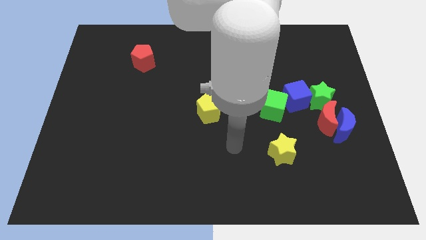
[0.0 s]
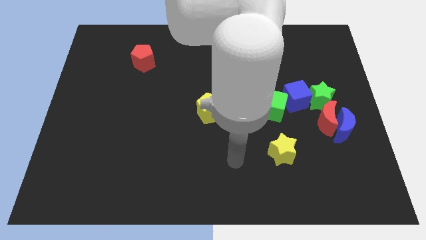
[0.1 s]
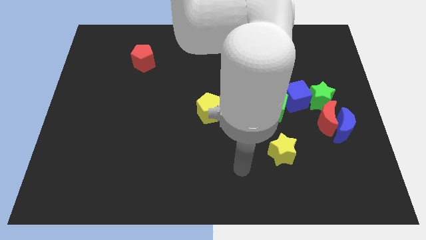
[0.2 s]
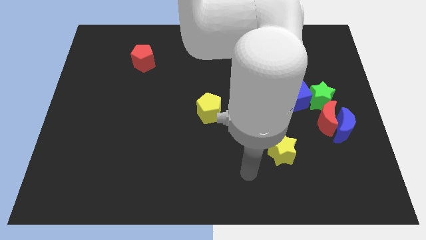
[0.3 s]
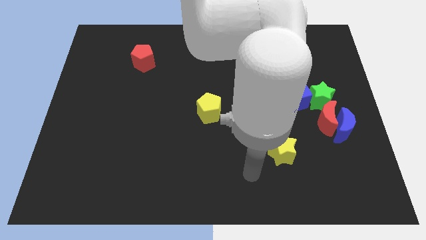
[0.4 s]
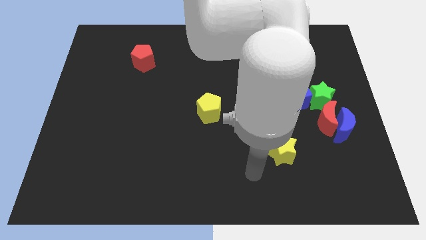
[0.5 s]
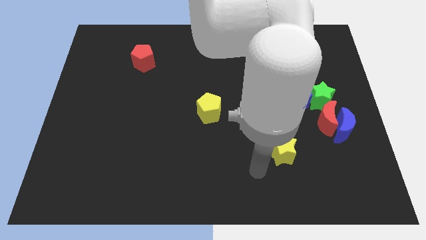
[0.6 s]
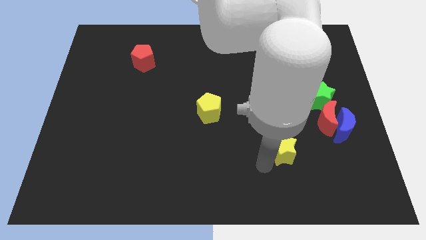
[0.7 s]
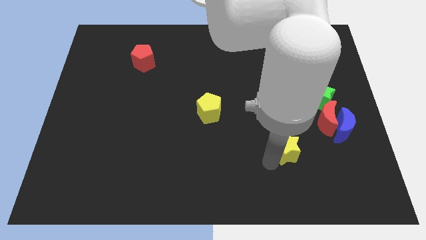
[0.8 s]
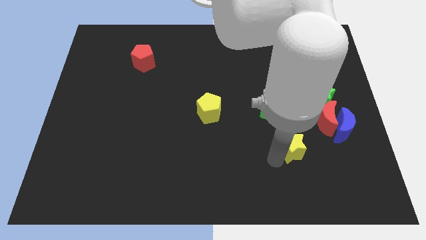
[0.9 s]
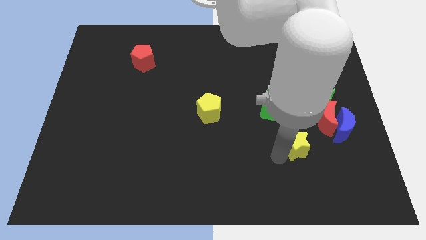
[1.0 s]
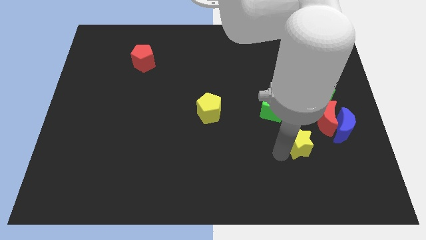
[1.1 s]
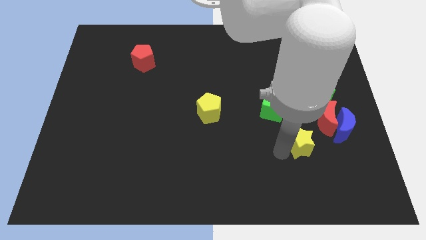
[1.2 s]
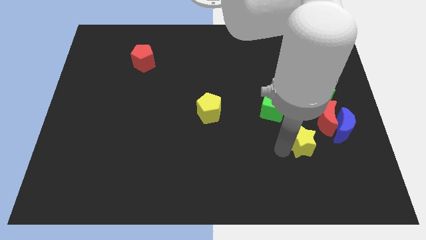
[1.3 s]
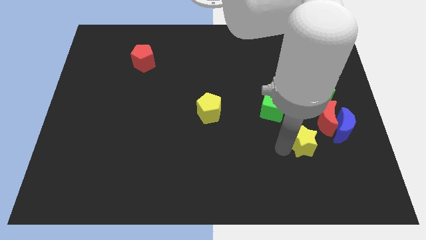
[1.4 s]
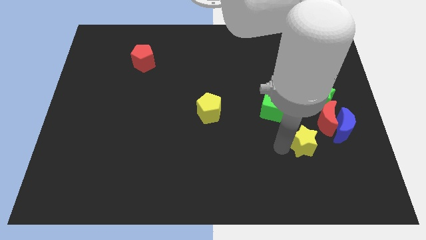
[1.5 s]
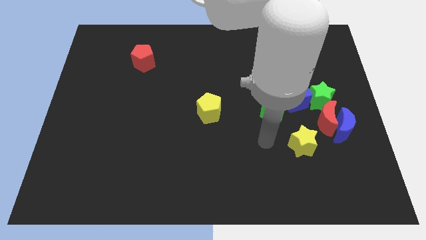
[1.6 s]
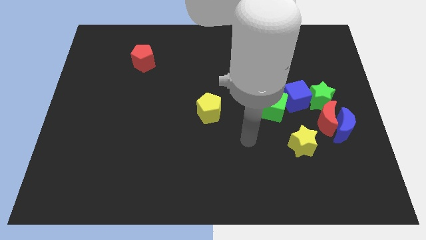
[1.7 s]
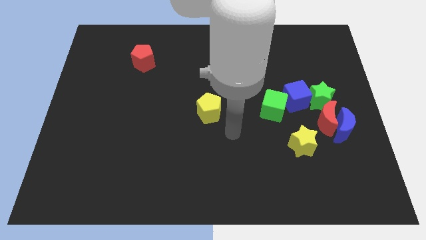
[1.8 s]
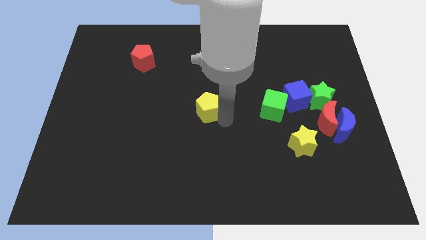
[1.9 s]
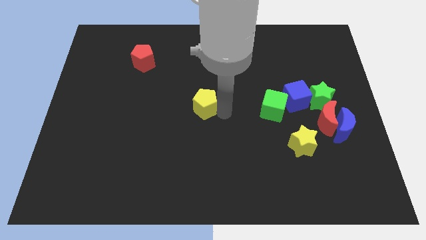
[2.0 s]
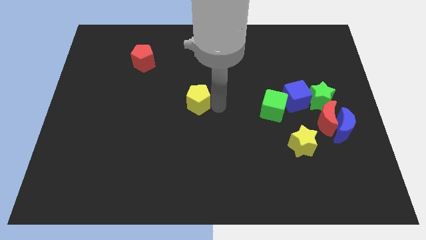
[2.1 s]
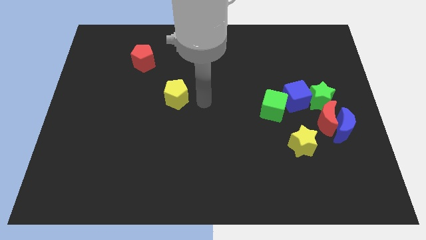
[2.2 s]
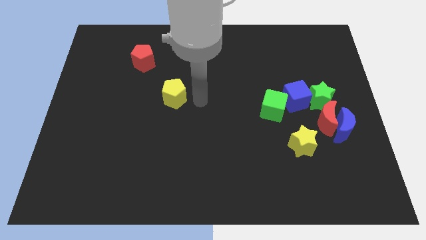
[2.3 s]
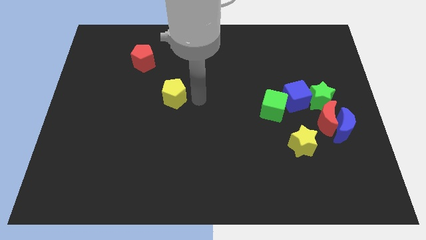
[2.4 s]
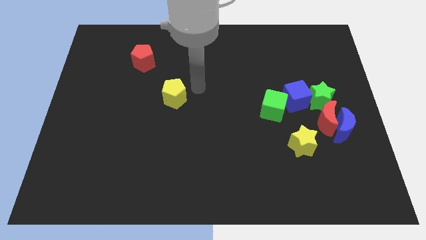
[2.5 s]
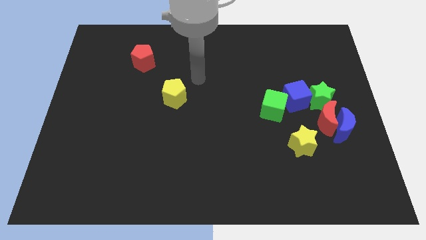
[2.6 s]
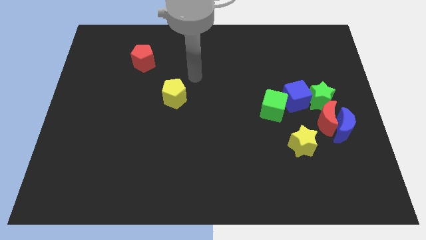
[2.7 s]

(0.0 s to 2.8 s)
push yellow star slightly upwards

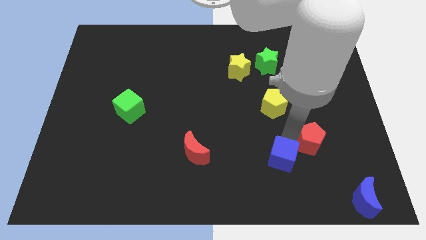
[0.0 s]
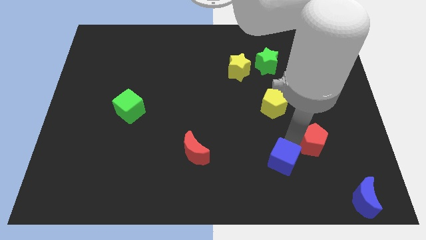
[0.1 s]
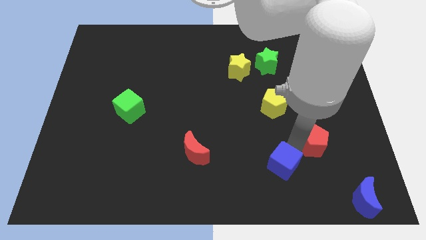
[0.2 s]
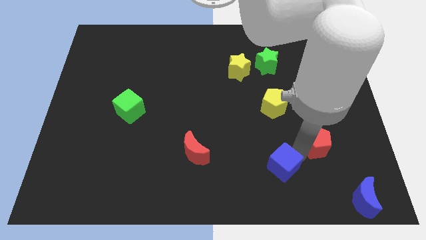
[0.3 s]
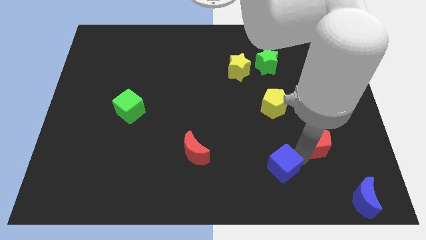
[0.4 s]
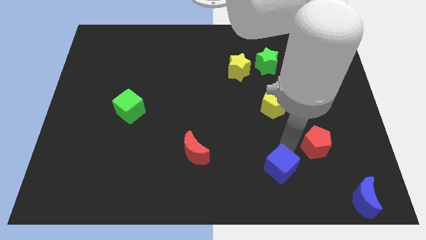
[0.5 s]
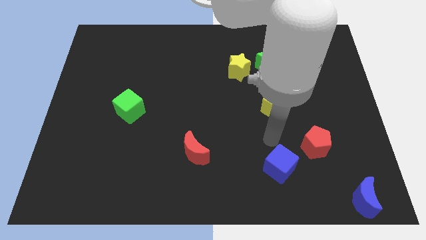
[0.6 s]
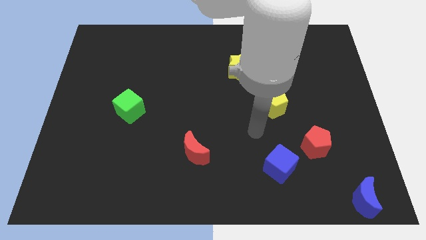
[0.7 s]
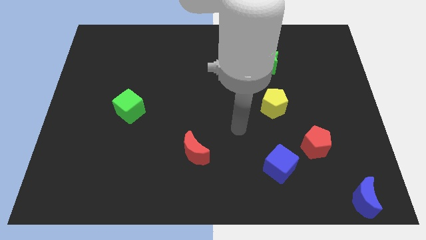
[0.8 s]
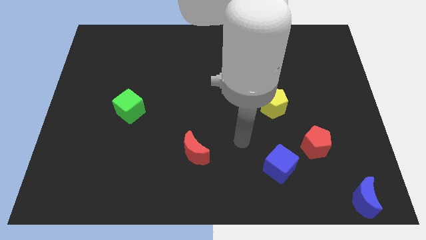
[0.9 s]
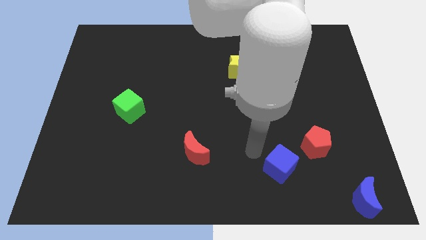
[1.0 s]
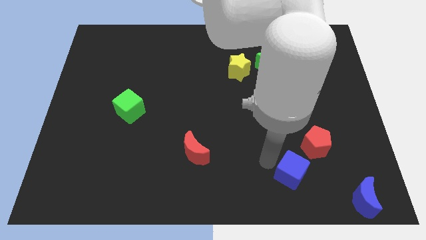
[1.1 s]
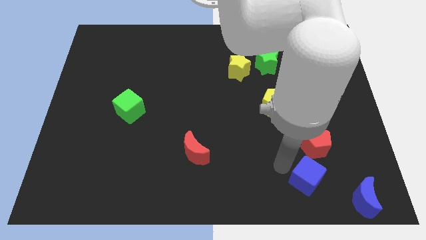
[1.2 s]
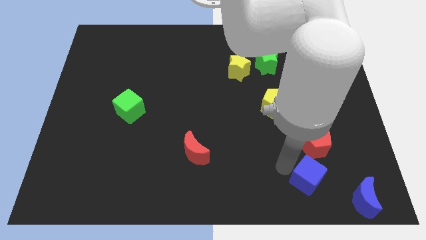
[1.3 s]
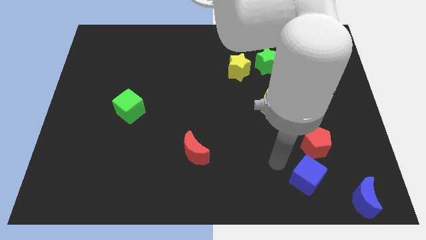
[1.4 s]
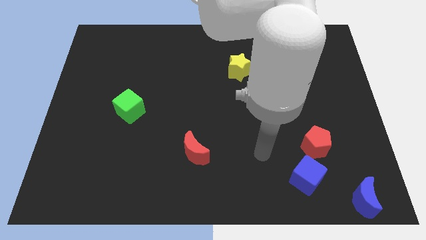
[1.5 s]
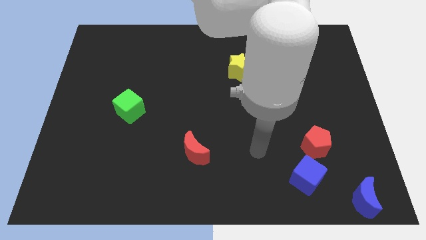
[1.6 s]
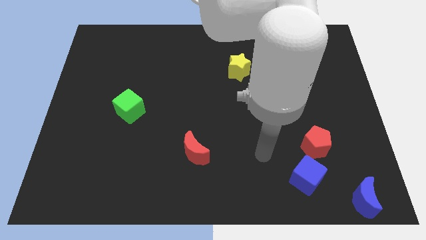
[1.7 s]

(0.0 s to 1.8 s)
separate the blue cube and red pentagon

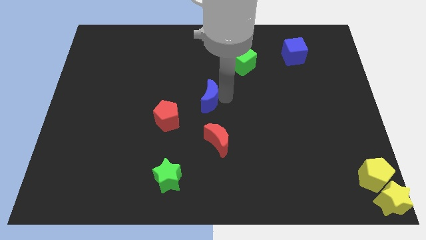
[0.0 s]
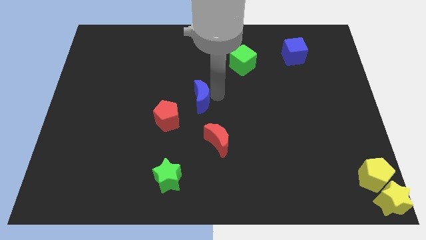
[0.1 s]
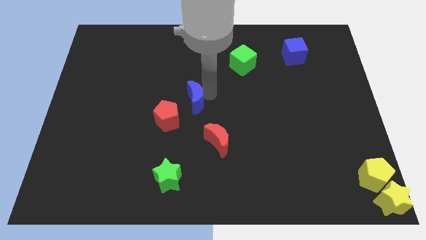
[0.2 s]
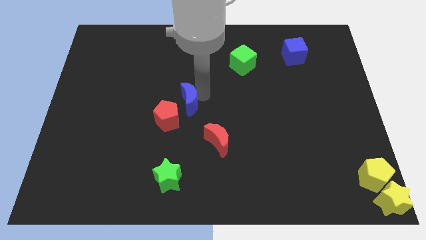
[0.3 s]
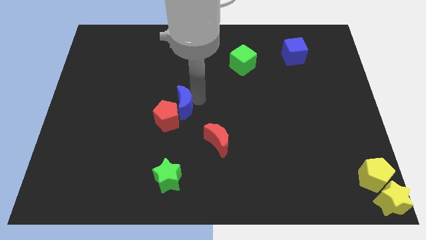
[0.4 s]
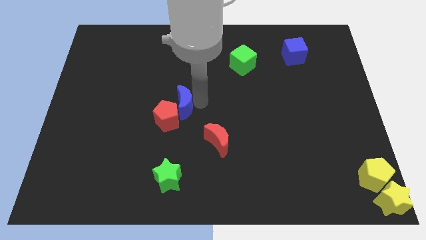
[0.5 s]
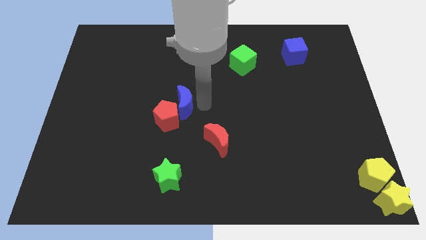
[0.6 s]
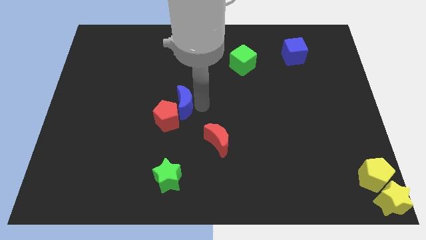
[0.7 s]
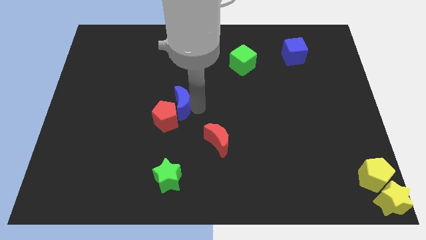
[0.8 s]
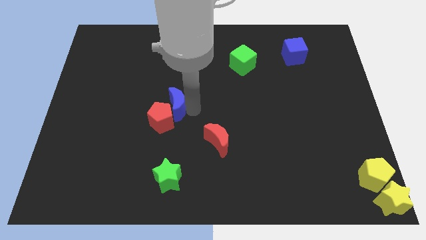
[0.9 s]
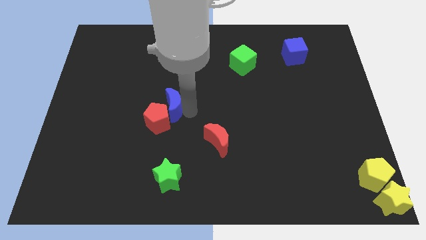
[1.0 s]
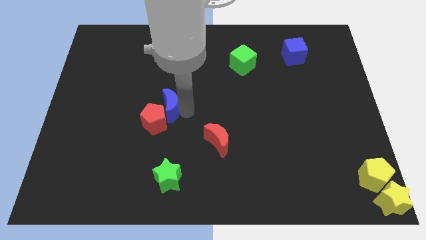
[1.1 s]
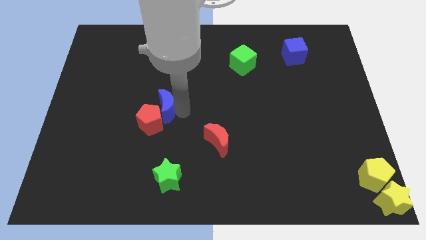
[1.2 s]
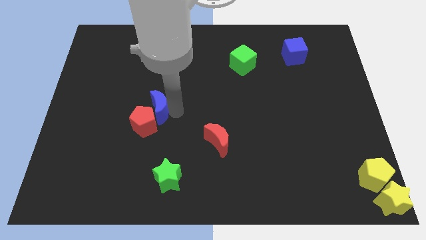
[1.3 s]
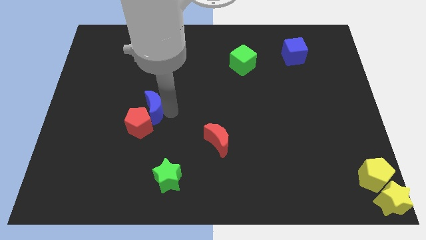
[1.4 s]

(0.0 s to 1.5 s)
push the blue moon along with the red pentagon slightly to the left

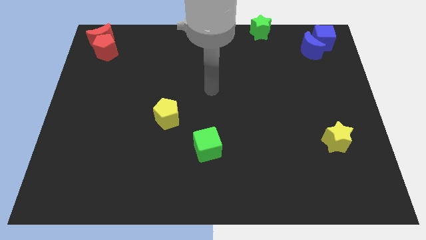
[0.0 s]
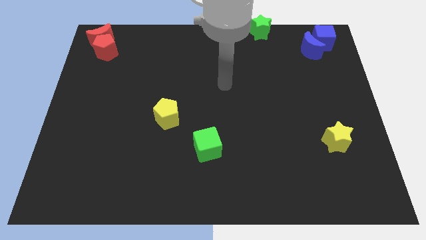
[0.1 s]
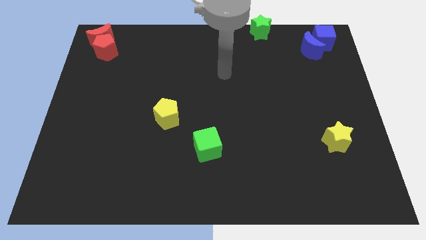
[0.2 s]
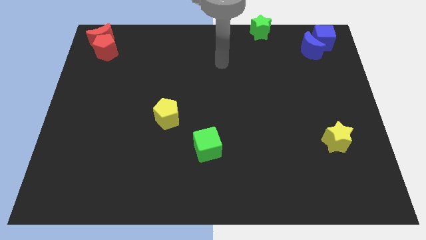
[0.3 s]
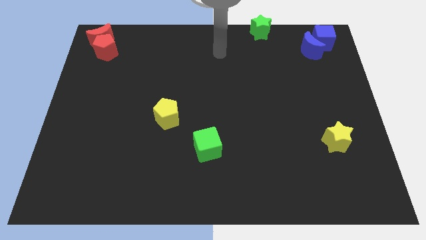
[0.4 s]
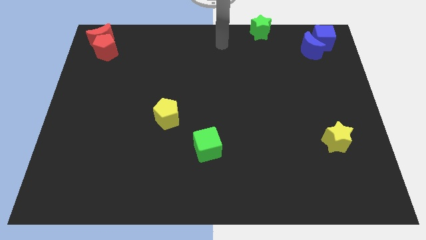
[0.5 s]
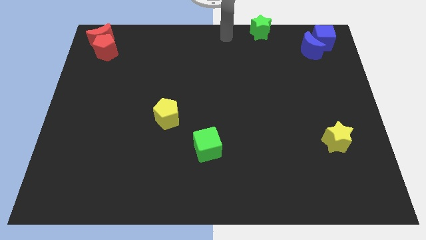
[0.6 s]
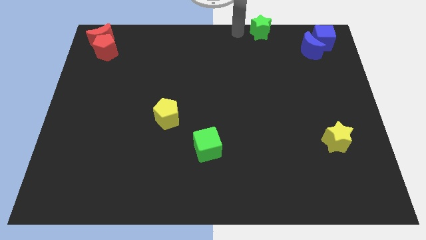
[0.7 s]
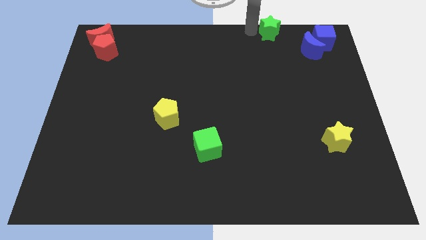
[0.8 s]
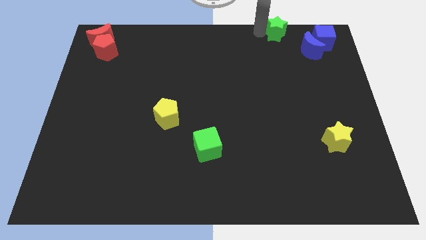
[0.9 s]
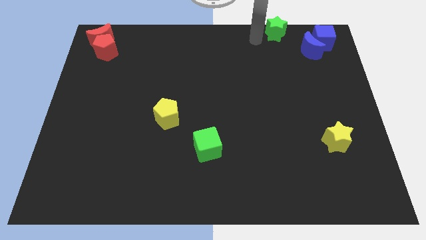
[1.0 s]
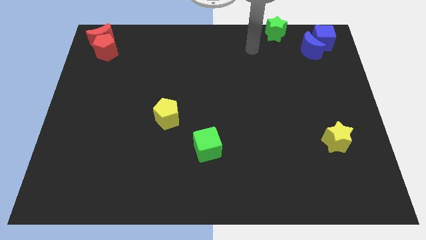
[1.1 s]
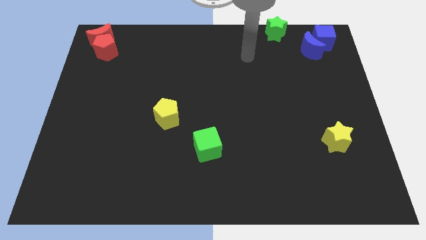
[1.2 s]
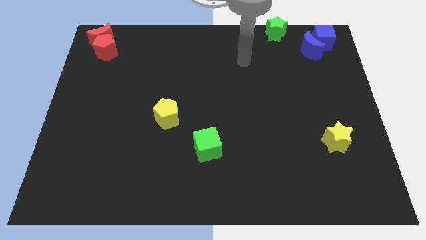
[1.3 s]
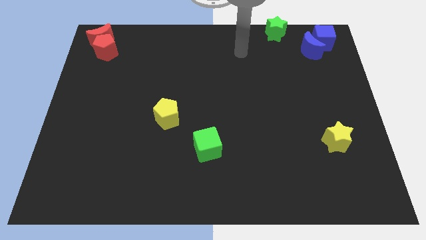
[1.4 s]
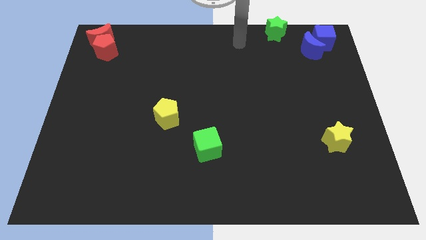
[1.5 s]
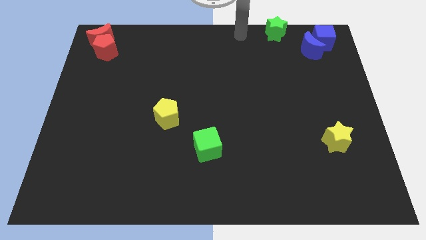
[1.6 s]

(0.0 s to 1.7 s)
push the green star to right

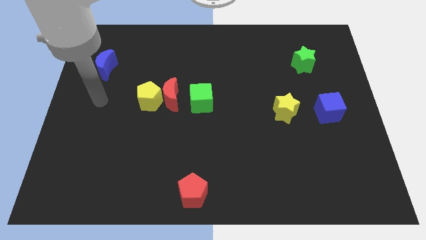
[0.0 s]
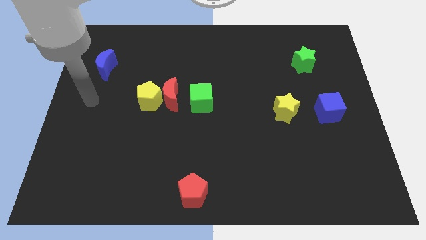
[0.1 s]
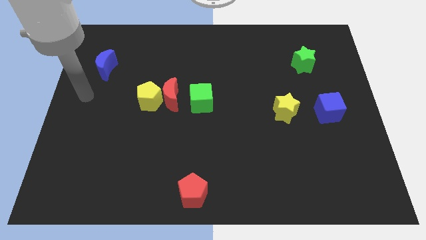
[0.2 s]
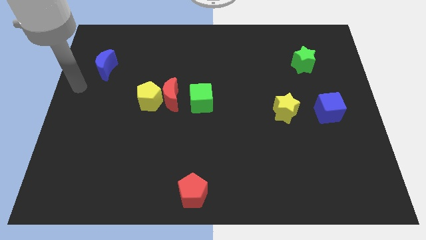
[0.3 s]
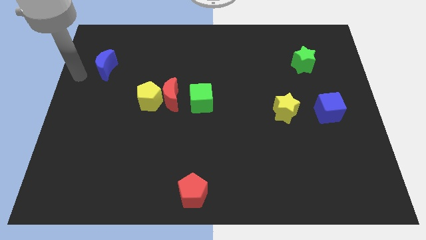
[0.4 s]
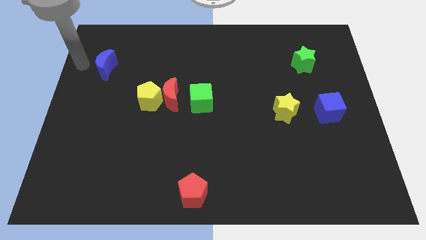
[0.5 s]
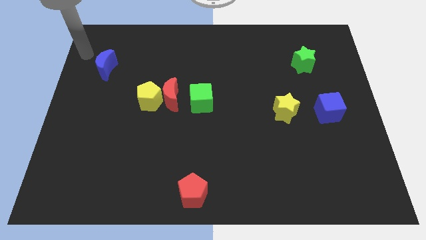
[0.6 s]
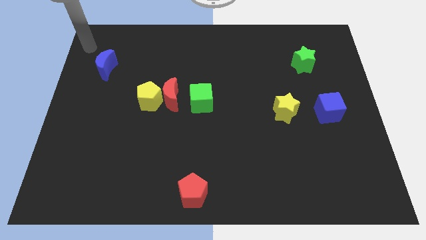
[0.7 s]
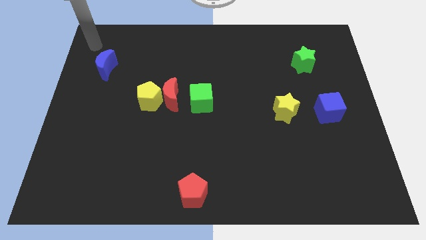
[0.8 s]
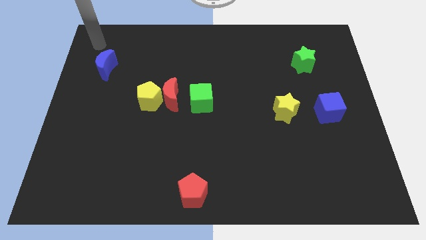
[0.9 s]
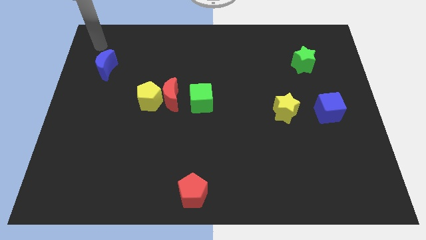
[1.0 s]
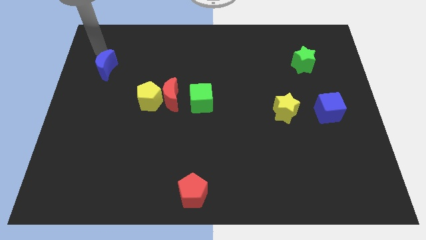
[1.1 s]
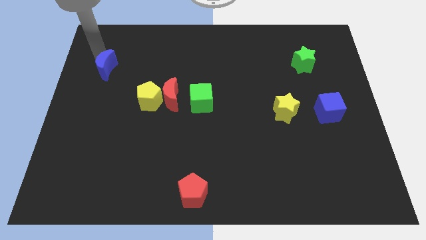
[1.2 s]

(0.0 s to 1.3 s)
move the arm towards the blue crescent
